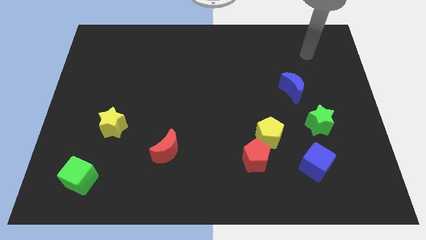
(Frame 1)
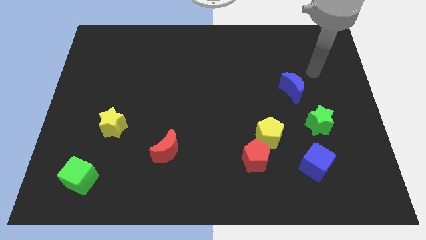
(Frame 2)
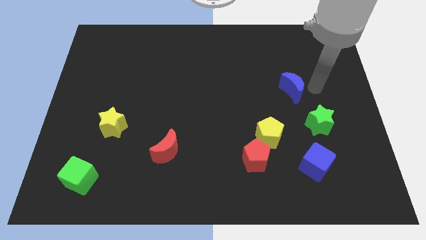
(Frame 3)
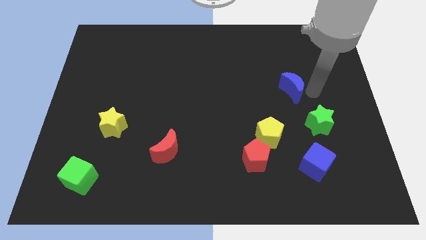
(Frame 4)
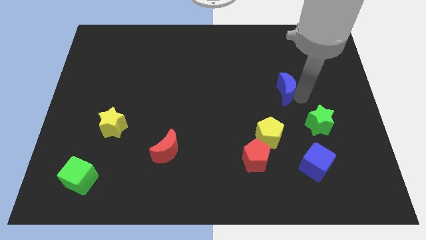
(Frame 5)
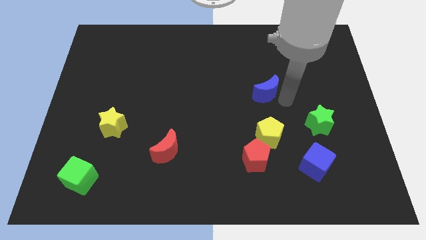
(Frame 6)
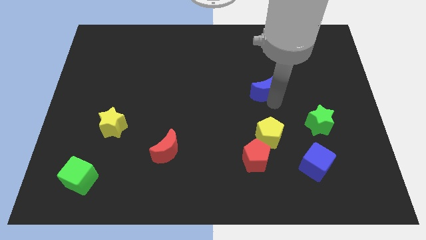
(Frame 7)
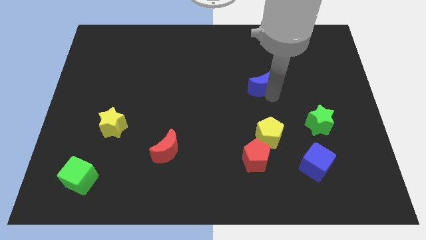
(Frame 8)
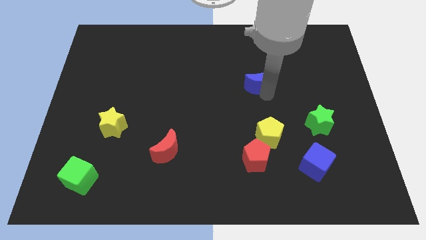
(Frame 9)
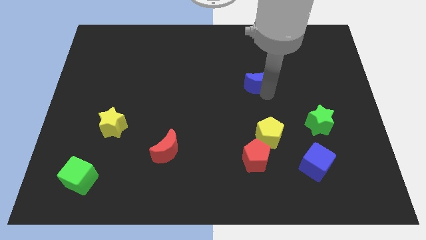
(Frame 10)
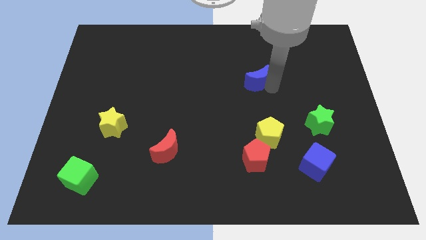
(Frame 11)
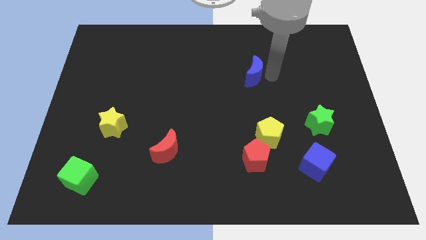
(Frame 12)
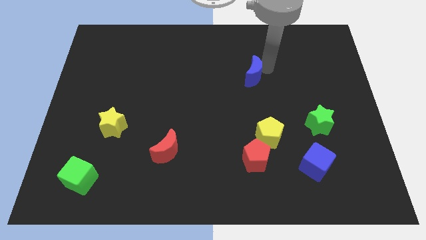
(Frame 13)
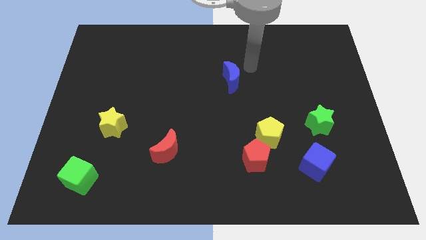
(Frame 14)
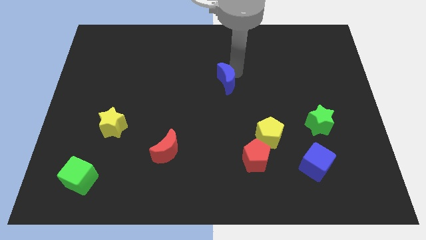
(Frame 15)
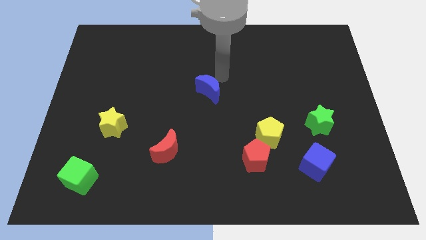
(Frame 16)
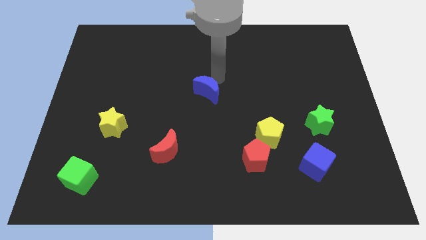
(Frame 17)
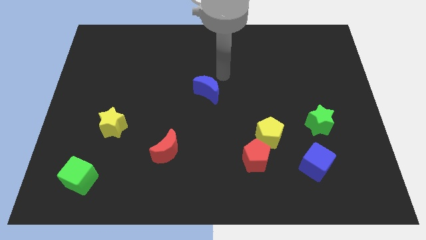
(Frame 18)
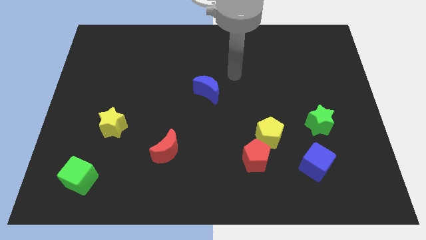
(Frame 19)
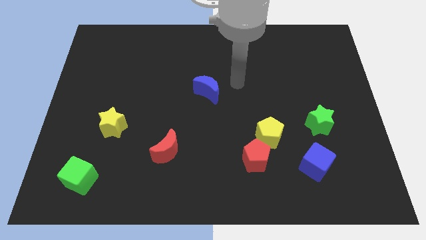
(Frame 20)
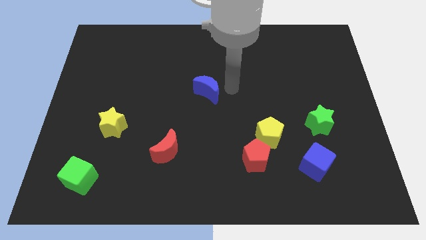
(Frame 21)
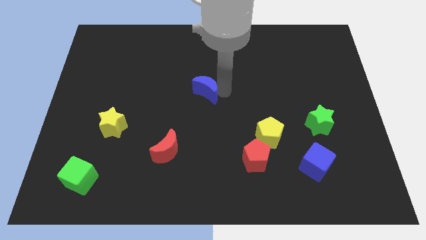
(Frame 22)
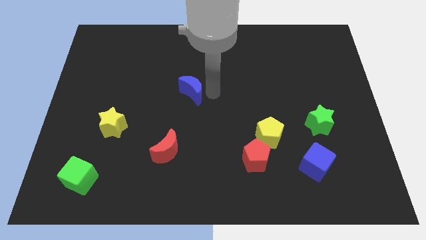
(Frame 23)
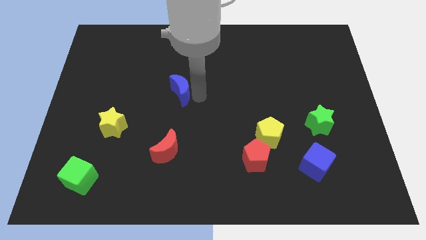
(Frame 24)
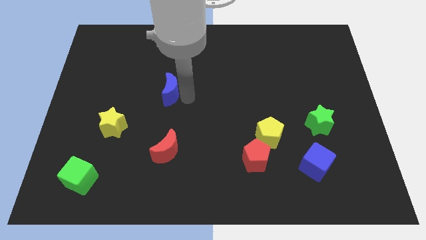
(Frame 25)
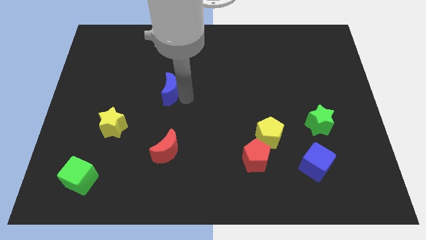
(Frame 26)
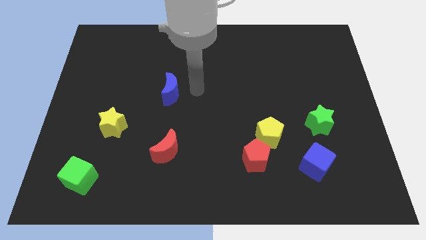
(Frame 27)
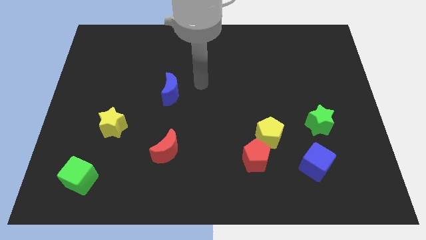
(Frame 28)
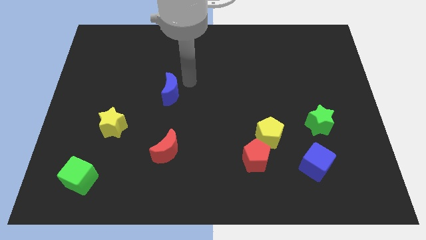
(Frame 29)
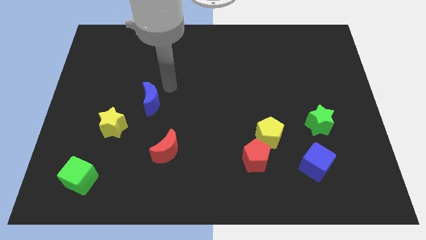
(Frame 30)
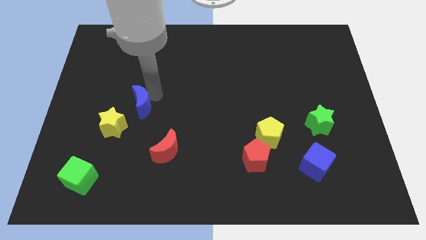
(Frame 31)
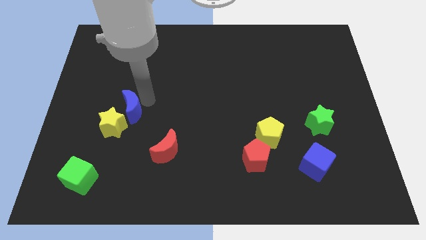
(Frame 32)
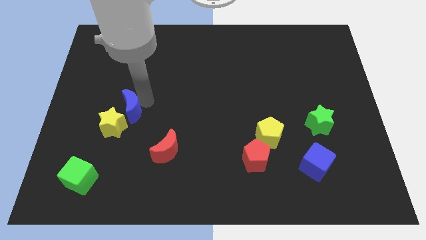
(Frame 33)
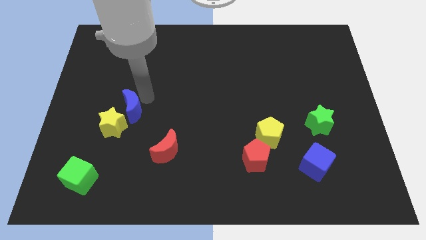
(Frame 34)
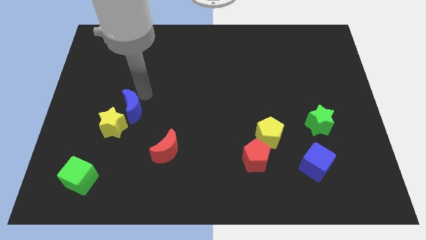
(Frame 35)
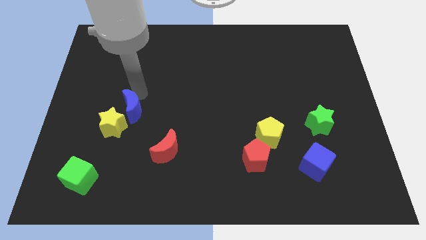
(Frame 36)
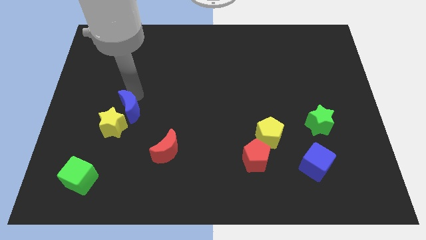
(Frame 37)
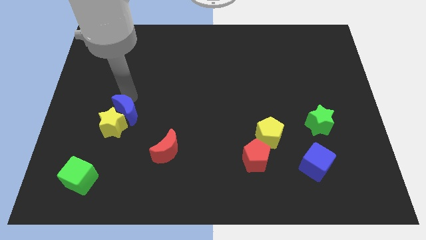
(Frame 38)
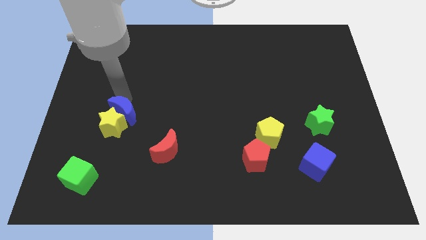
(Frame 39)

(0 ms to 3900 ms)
push the blue moon to the yellow star

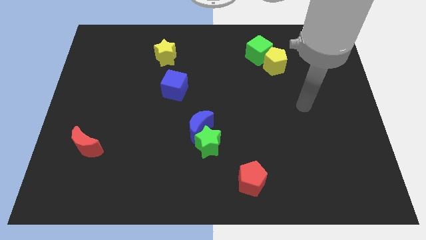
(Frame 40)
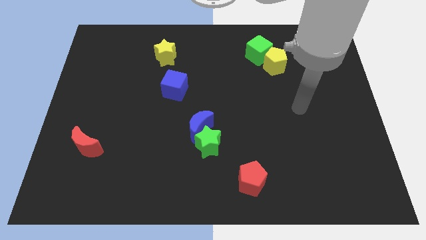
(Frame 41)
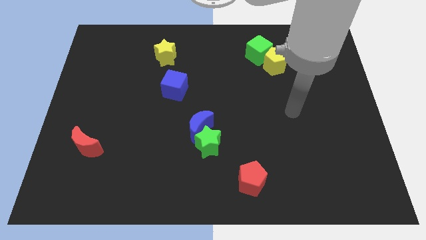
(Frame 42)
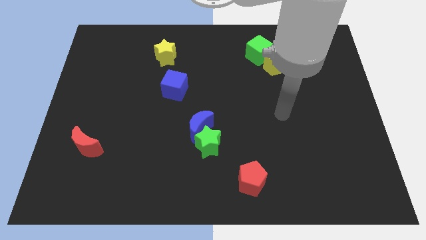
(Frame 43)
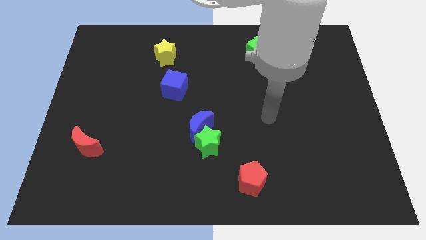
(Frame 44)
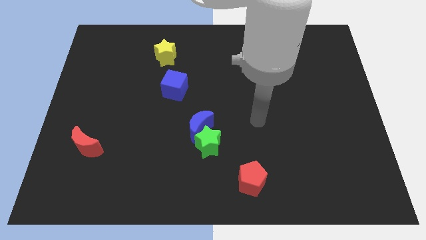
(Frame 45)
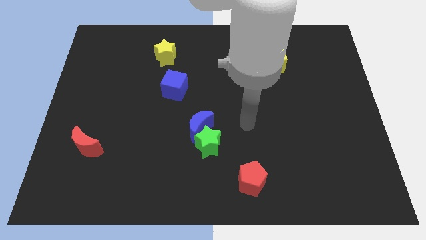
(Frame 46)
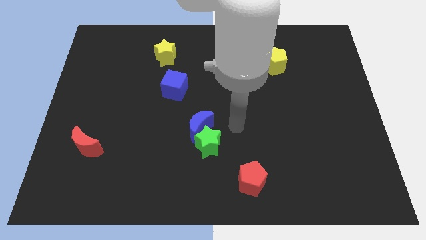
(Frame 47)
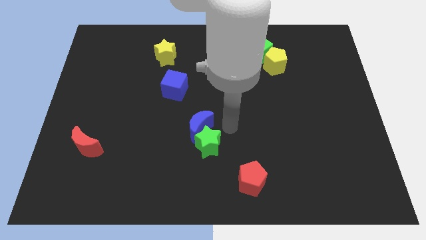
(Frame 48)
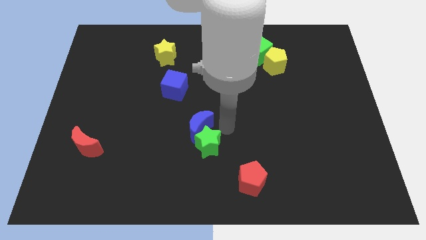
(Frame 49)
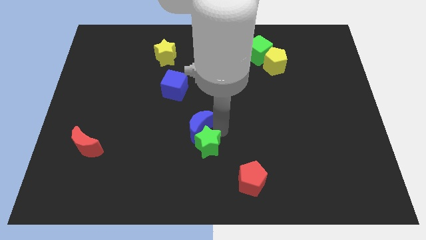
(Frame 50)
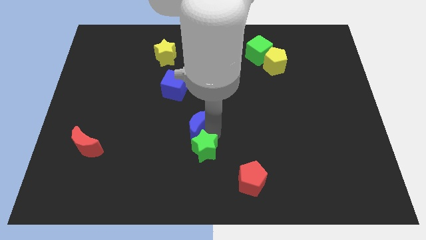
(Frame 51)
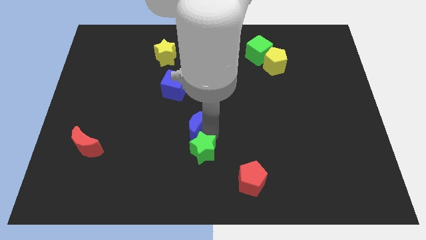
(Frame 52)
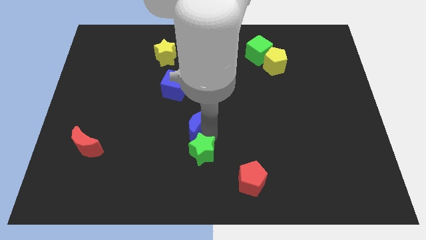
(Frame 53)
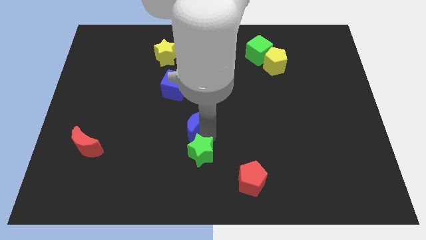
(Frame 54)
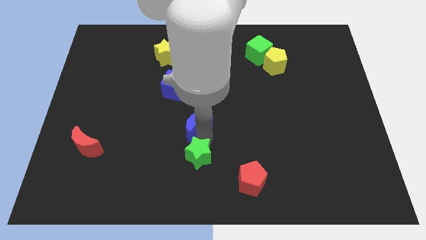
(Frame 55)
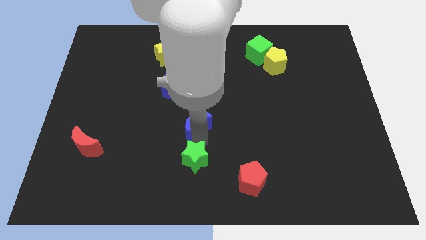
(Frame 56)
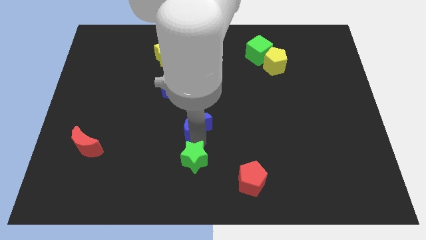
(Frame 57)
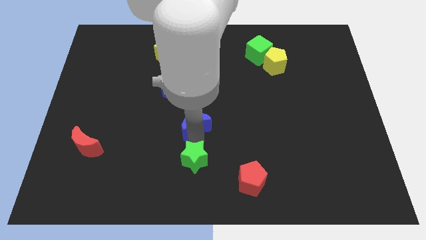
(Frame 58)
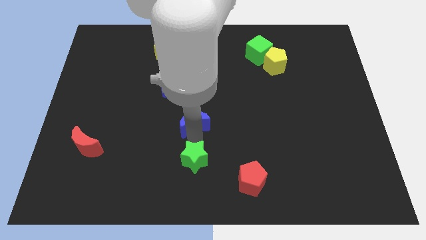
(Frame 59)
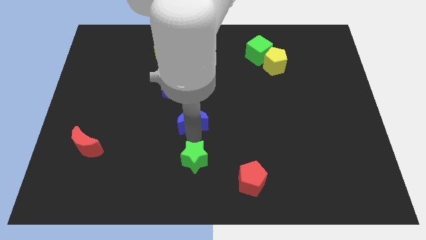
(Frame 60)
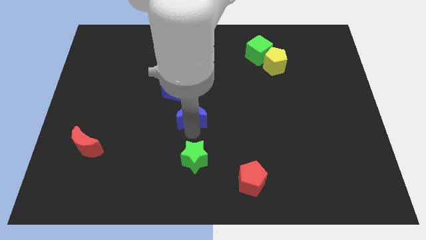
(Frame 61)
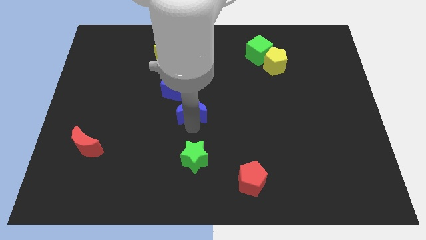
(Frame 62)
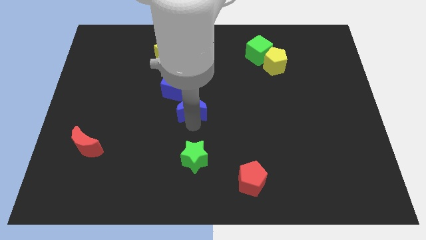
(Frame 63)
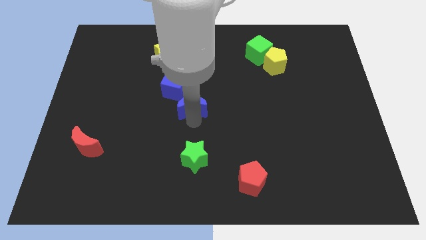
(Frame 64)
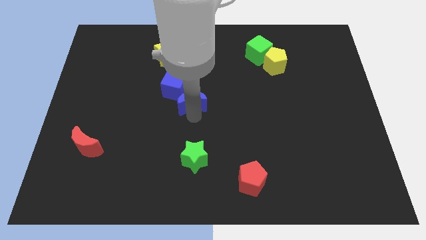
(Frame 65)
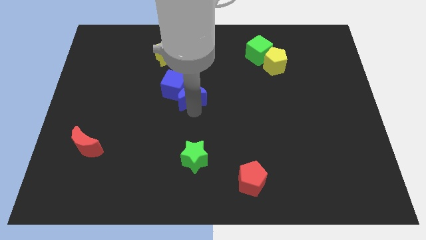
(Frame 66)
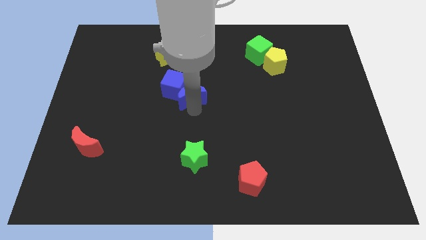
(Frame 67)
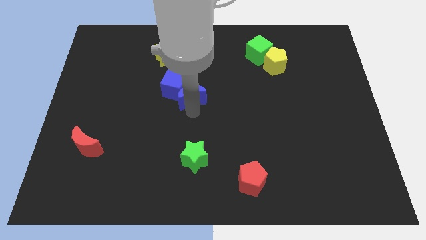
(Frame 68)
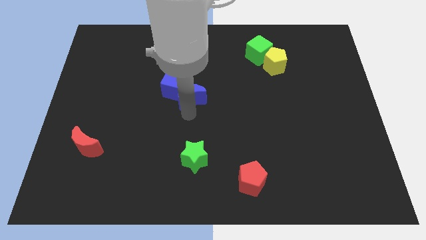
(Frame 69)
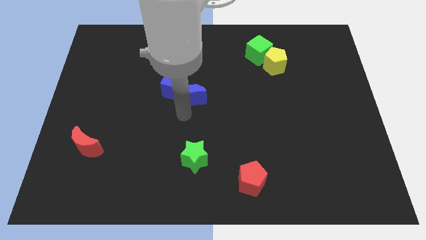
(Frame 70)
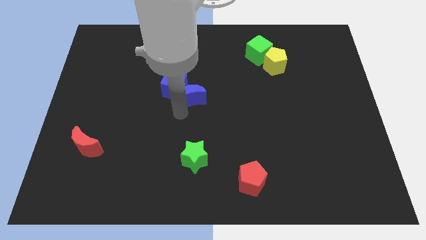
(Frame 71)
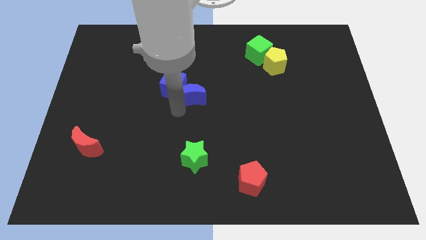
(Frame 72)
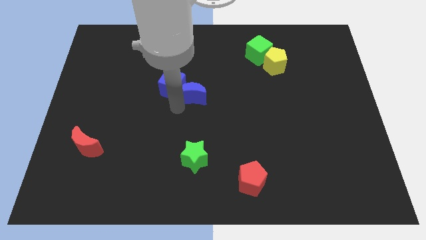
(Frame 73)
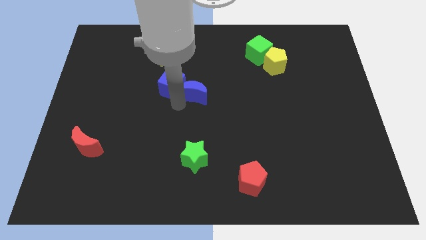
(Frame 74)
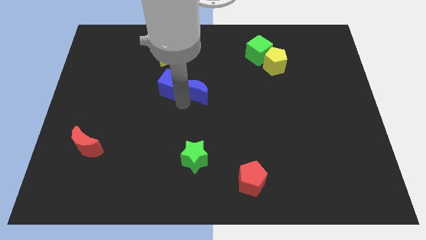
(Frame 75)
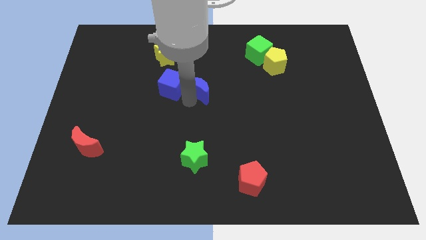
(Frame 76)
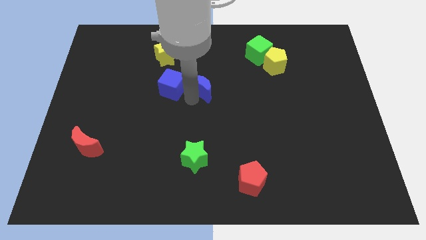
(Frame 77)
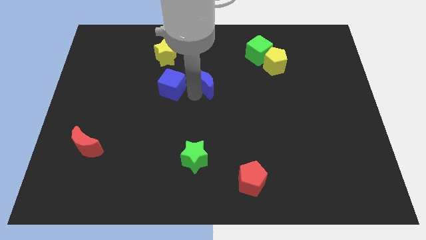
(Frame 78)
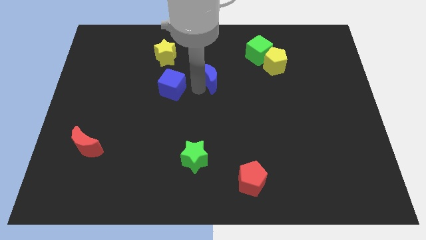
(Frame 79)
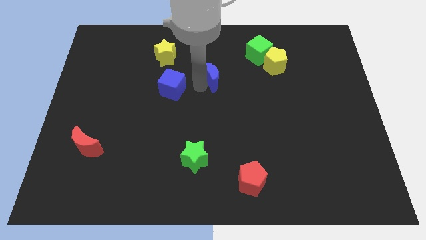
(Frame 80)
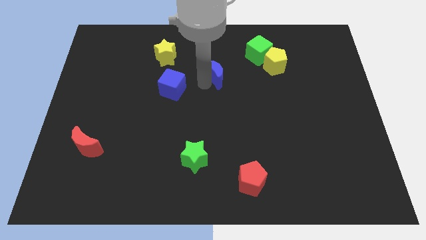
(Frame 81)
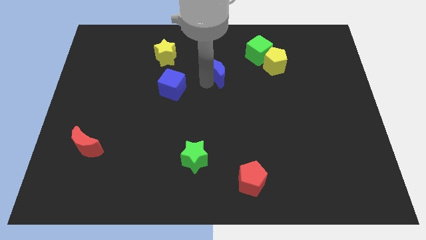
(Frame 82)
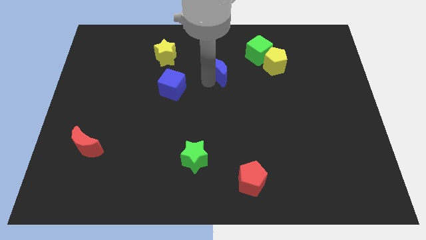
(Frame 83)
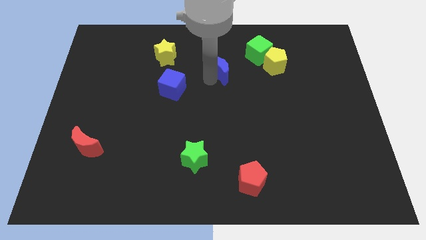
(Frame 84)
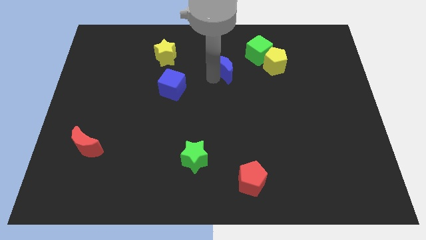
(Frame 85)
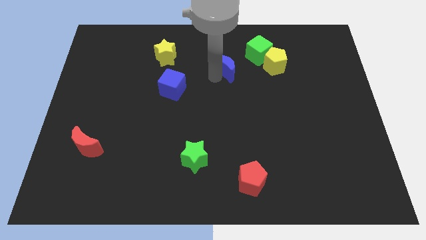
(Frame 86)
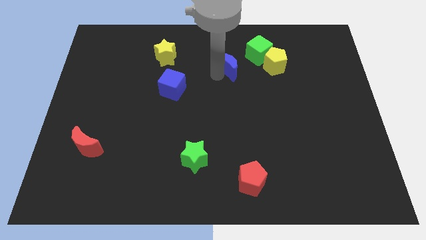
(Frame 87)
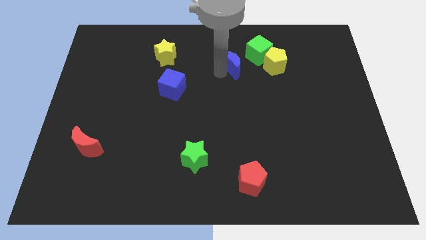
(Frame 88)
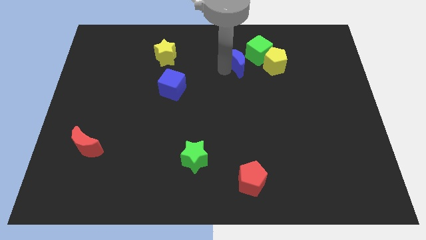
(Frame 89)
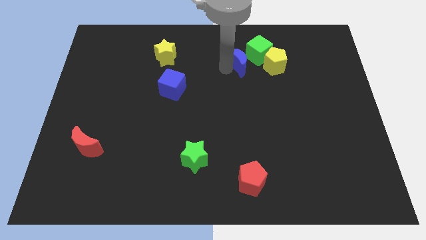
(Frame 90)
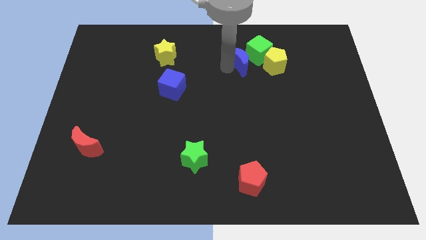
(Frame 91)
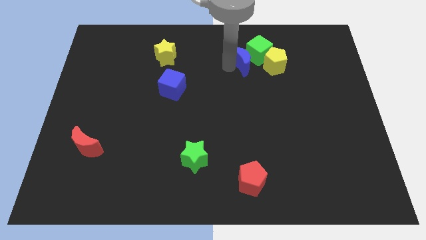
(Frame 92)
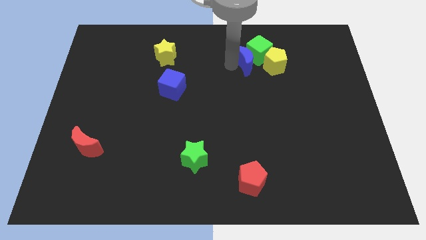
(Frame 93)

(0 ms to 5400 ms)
slide the blue moon towards the green cube
